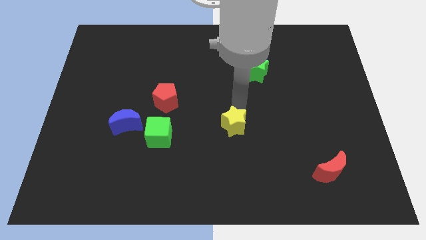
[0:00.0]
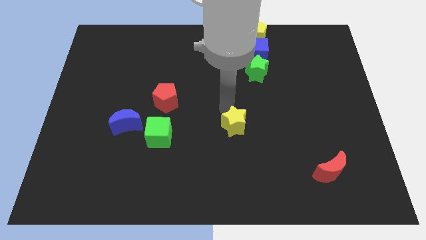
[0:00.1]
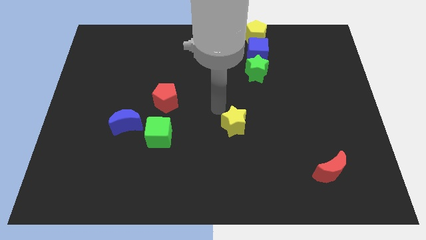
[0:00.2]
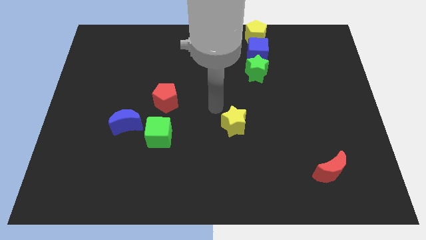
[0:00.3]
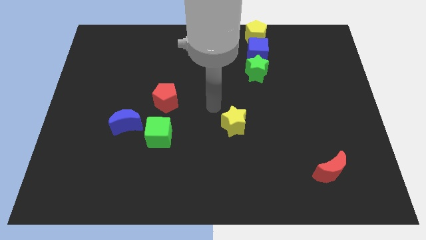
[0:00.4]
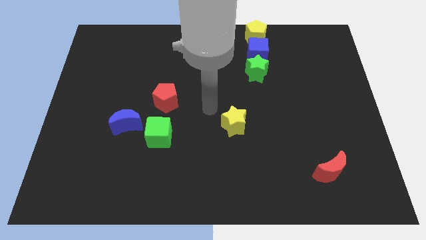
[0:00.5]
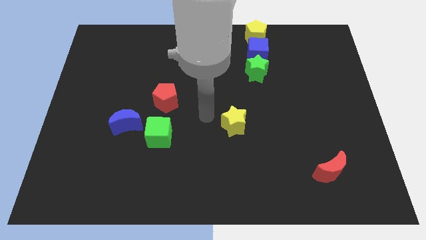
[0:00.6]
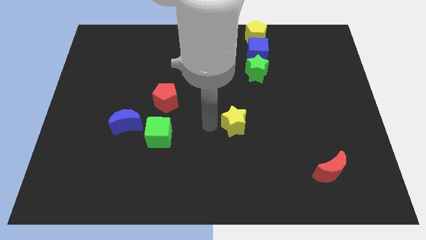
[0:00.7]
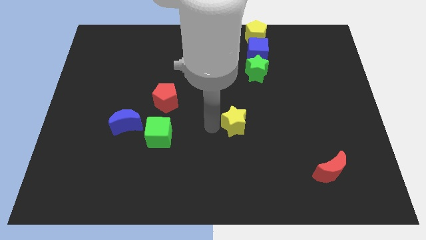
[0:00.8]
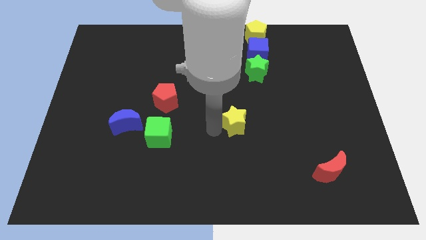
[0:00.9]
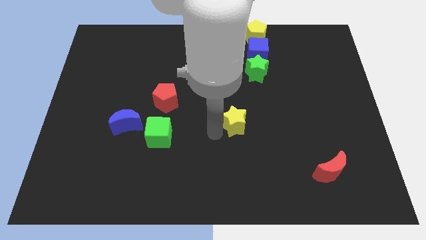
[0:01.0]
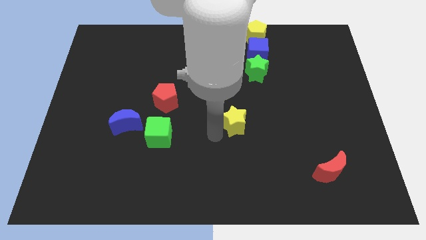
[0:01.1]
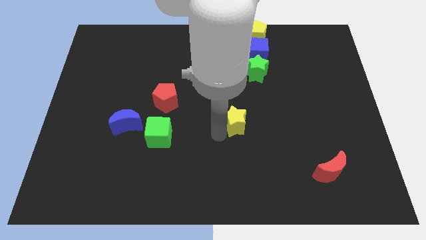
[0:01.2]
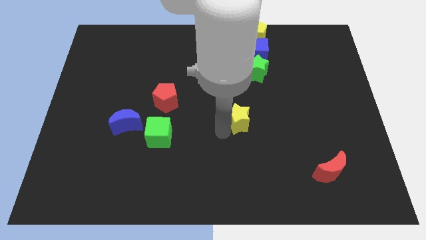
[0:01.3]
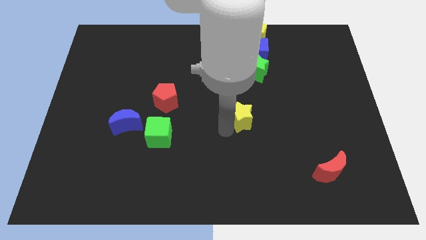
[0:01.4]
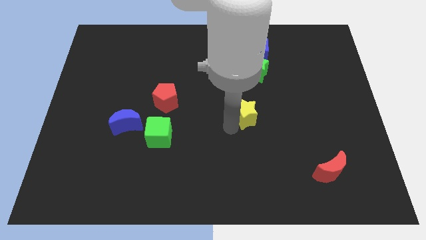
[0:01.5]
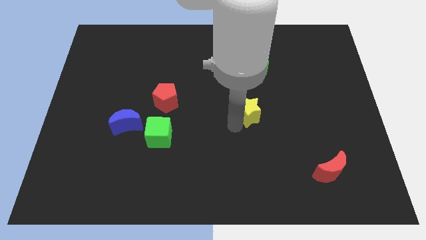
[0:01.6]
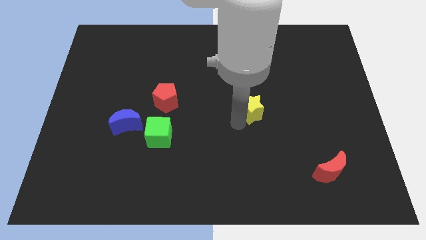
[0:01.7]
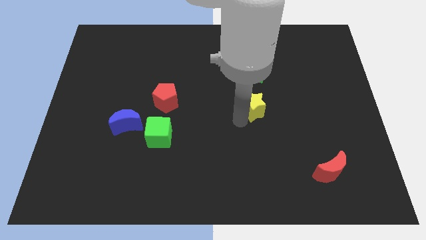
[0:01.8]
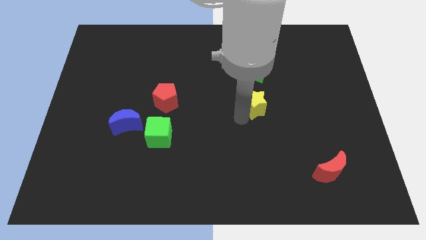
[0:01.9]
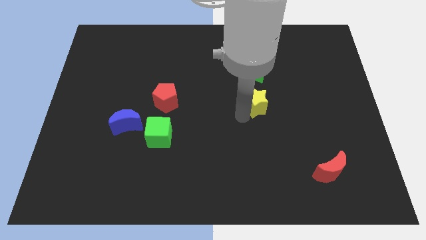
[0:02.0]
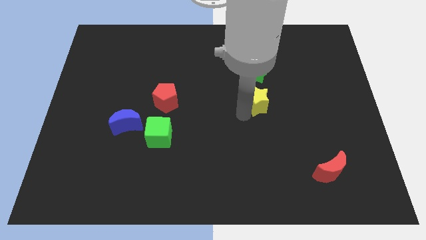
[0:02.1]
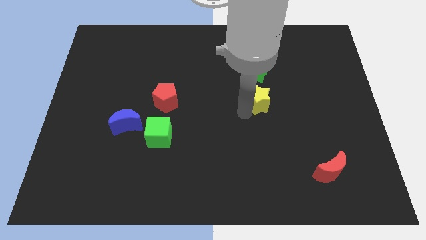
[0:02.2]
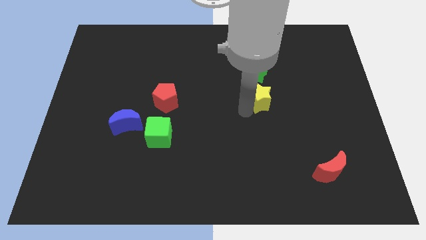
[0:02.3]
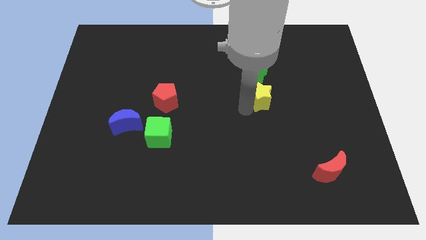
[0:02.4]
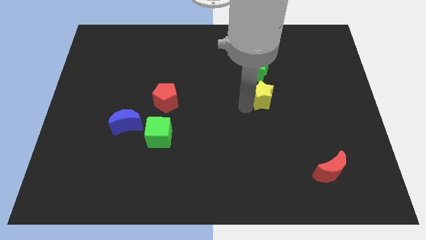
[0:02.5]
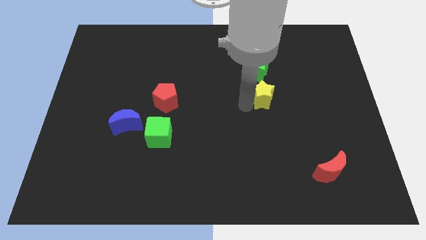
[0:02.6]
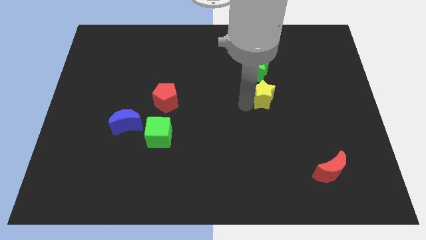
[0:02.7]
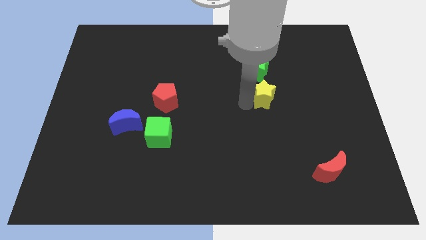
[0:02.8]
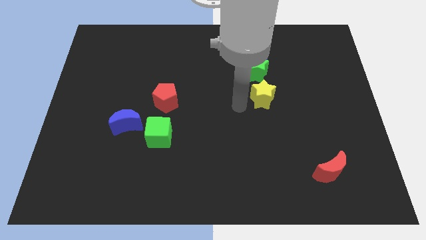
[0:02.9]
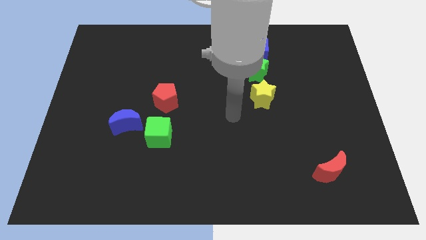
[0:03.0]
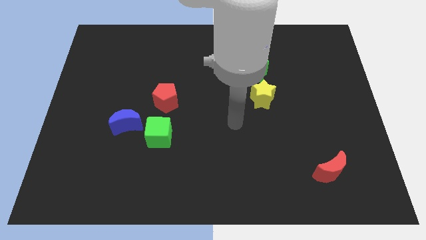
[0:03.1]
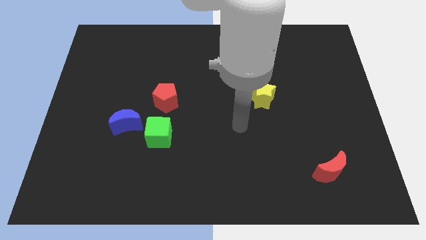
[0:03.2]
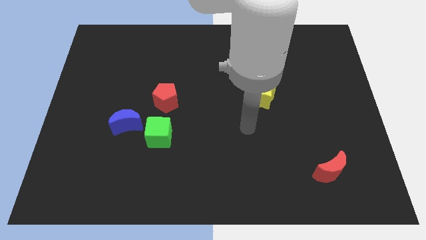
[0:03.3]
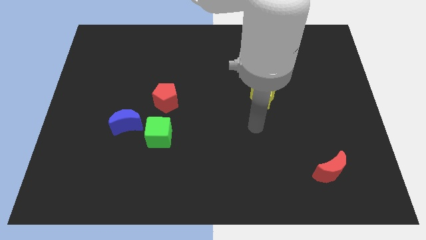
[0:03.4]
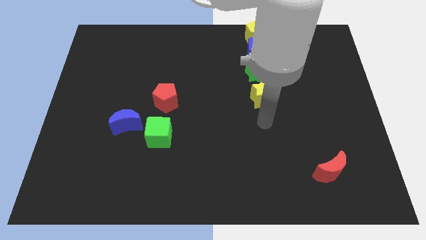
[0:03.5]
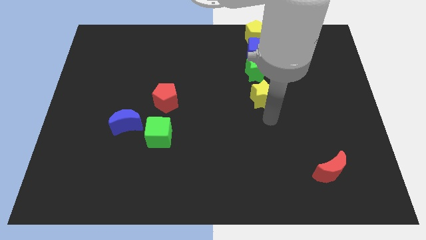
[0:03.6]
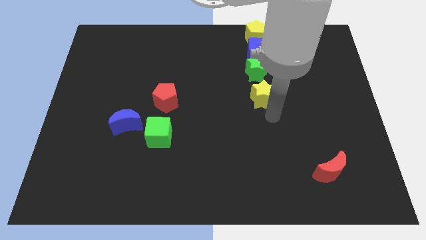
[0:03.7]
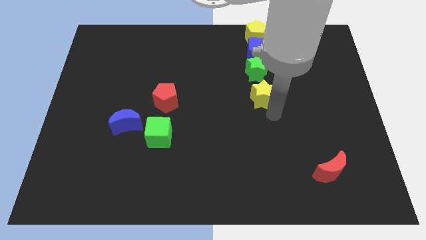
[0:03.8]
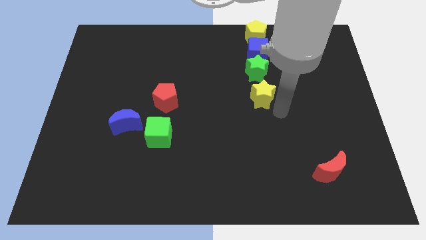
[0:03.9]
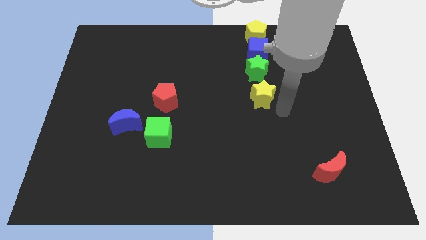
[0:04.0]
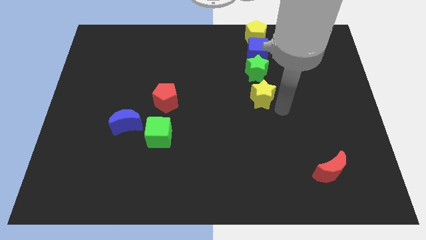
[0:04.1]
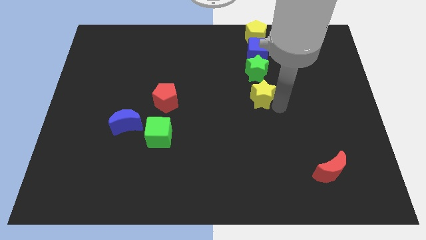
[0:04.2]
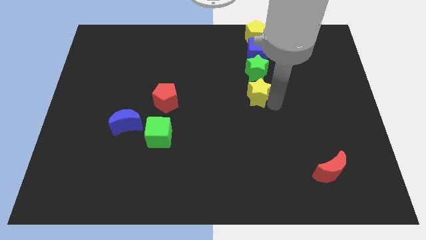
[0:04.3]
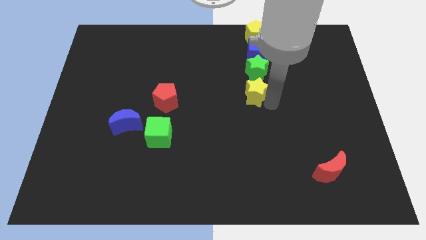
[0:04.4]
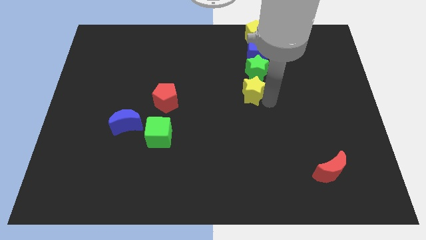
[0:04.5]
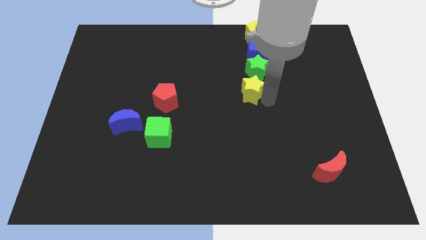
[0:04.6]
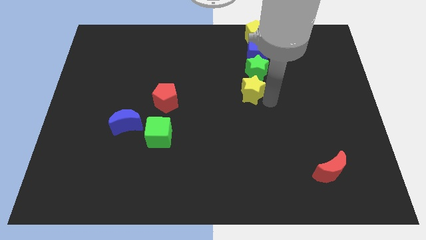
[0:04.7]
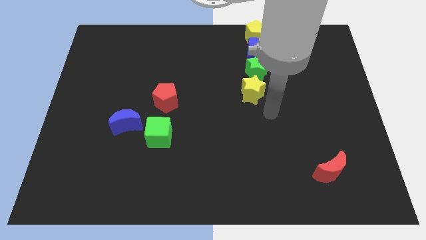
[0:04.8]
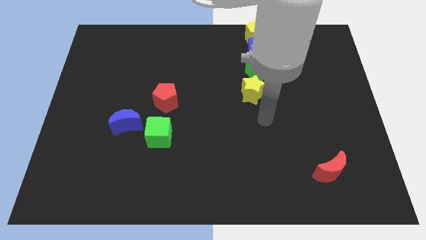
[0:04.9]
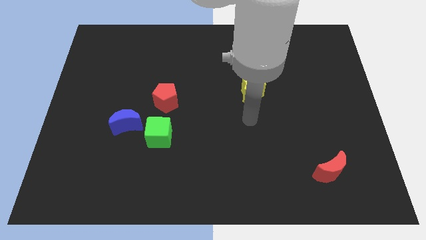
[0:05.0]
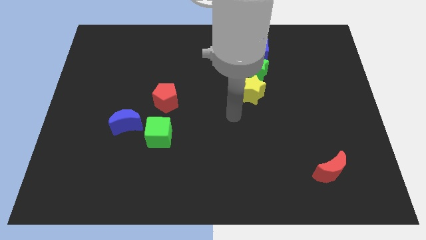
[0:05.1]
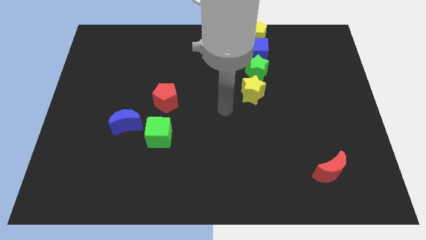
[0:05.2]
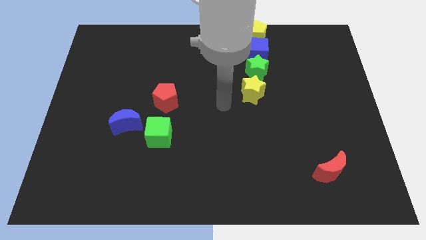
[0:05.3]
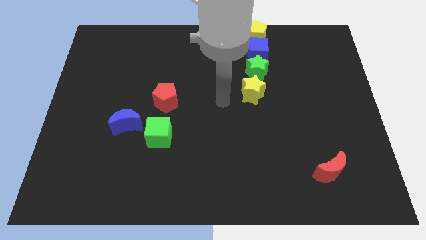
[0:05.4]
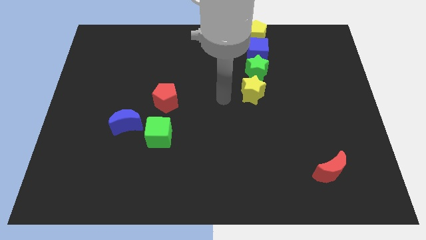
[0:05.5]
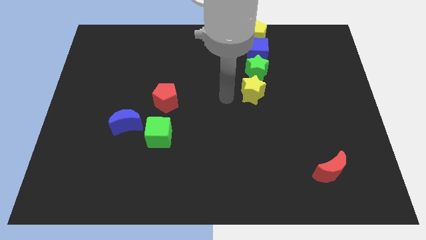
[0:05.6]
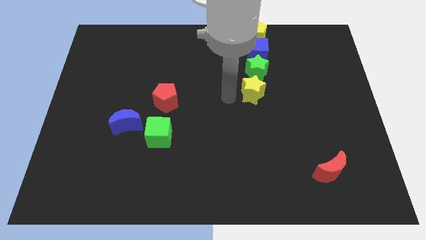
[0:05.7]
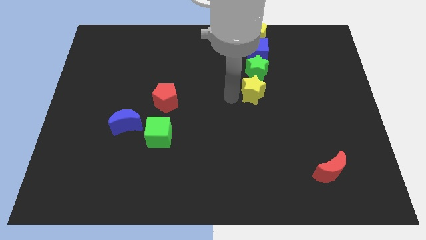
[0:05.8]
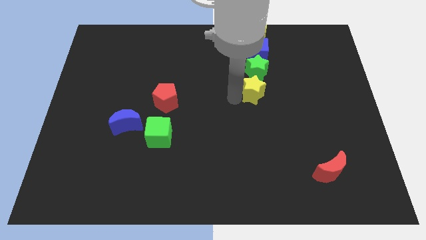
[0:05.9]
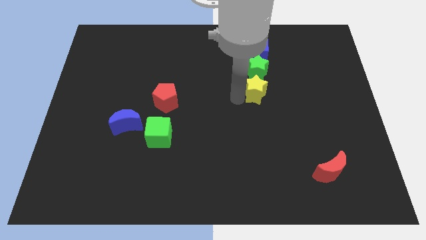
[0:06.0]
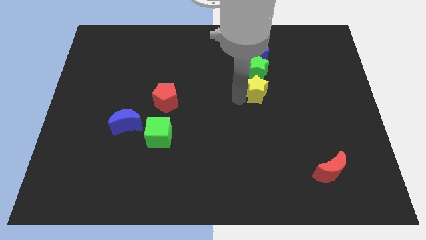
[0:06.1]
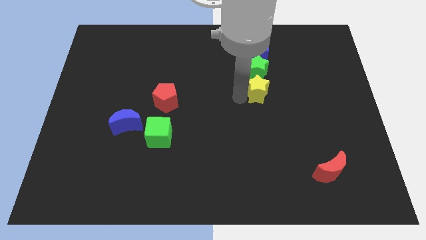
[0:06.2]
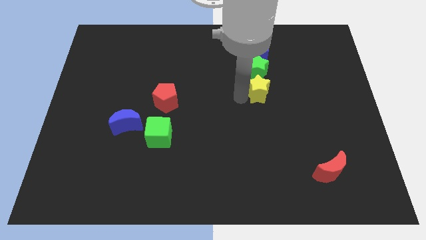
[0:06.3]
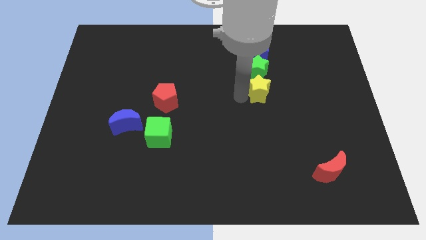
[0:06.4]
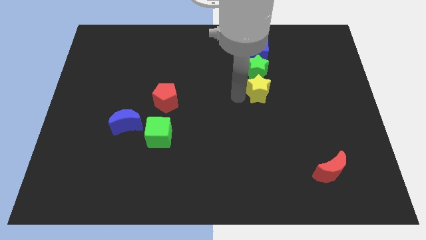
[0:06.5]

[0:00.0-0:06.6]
push the yellow star below the green star to form a vertical line of blocks

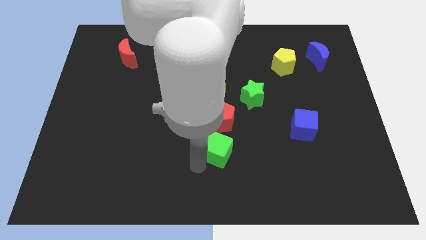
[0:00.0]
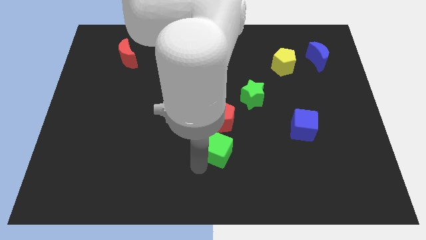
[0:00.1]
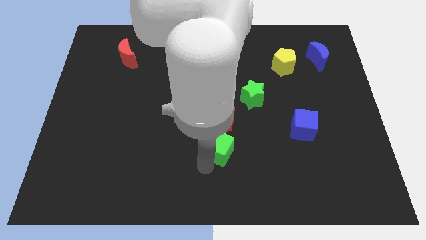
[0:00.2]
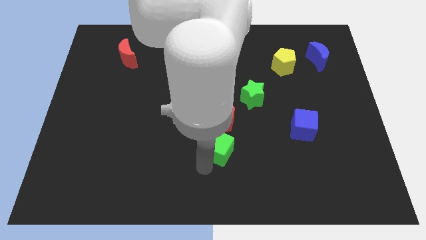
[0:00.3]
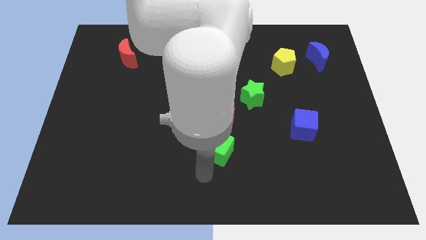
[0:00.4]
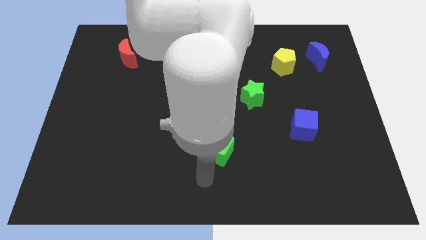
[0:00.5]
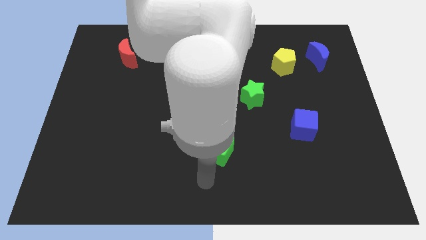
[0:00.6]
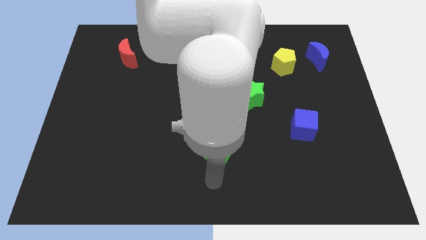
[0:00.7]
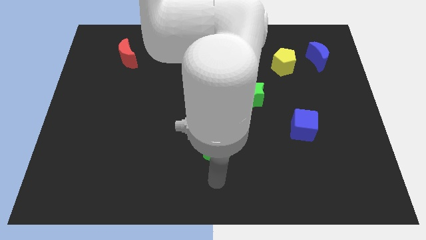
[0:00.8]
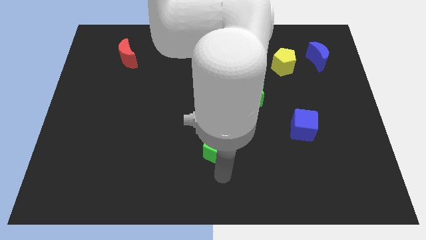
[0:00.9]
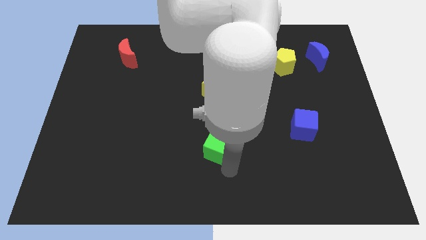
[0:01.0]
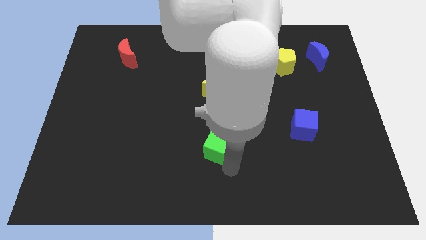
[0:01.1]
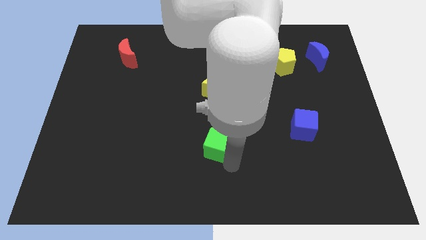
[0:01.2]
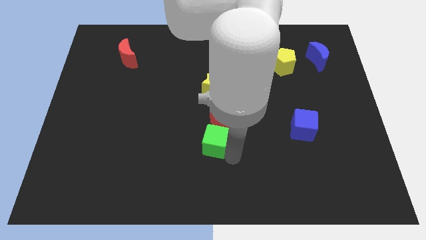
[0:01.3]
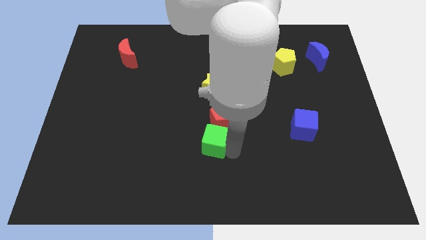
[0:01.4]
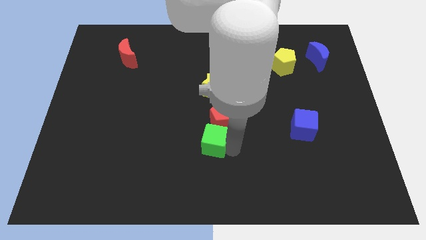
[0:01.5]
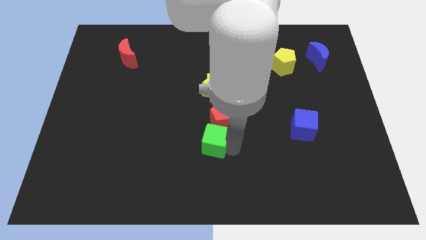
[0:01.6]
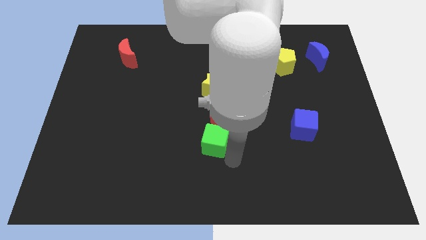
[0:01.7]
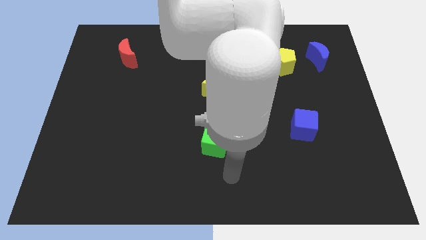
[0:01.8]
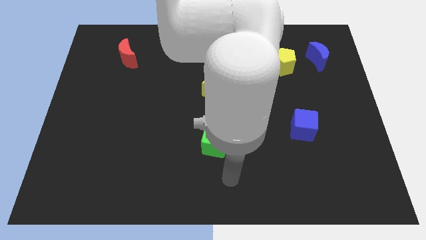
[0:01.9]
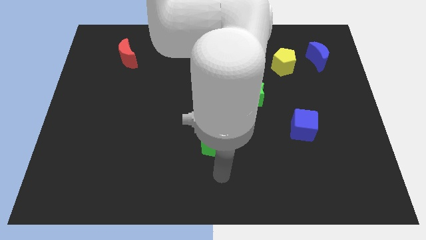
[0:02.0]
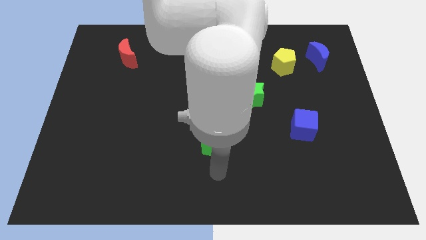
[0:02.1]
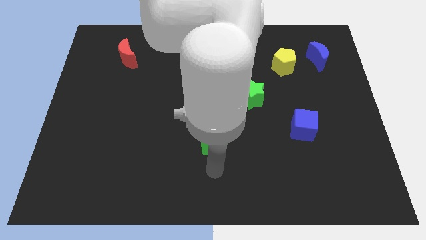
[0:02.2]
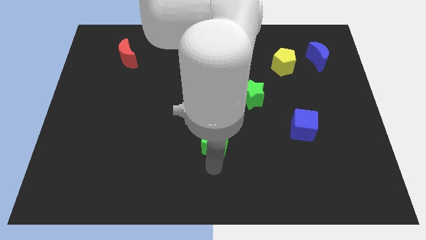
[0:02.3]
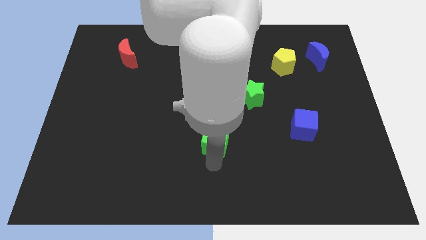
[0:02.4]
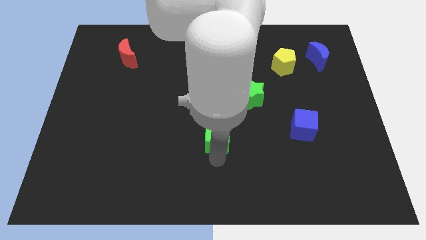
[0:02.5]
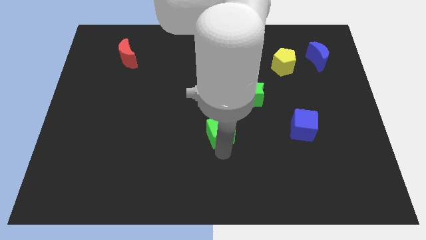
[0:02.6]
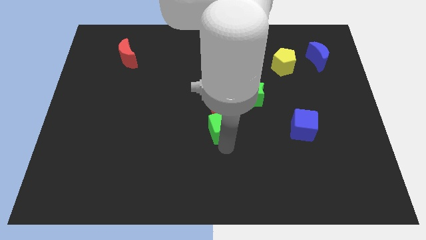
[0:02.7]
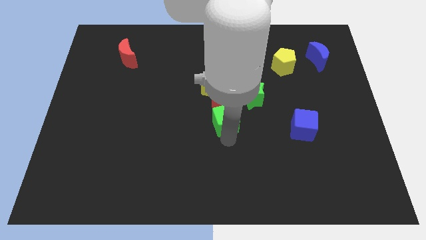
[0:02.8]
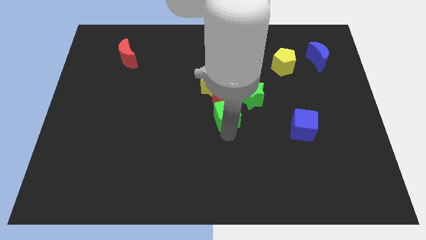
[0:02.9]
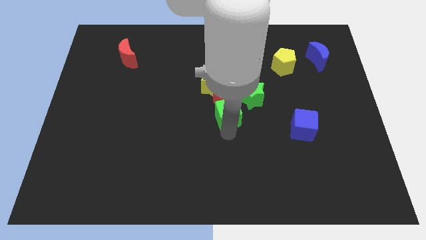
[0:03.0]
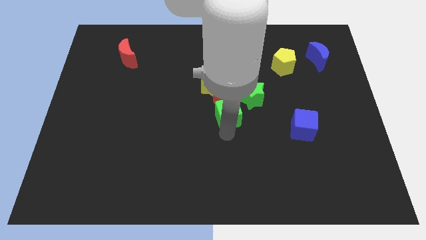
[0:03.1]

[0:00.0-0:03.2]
push the green cube into the red pentagon
